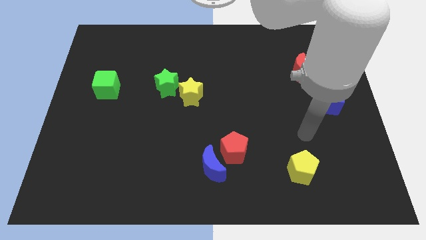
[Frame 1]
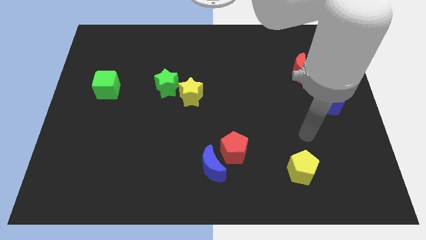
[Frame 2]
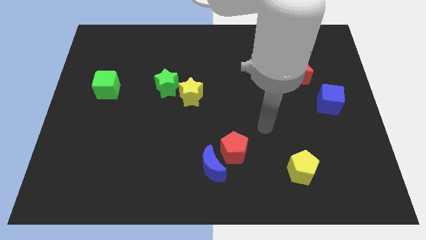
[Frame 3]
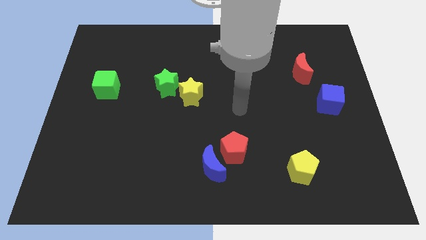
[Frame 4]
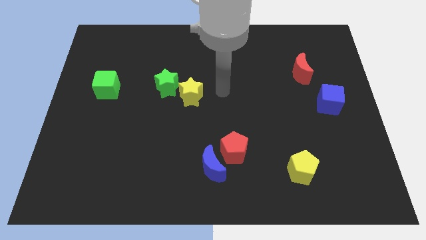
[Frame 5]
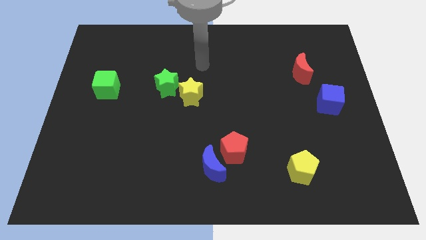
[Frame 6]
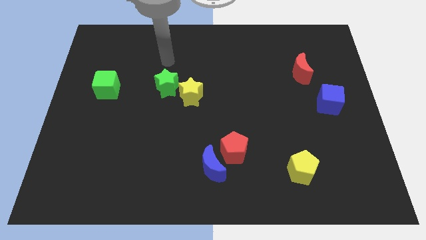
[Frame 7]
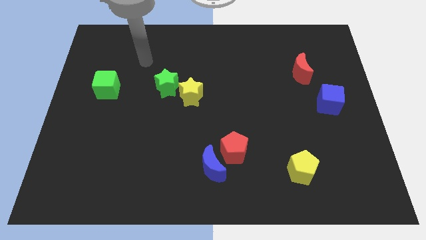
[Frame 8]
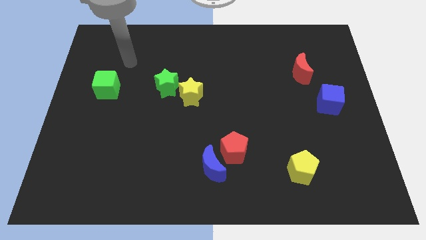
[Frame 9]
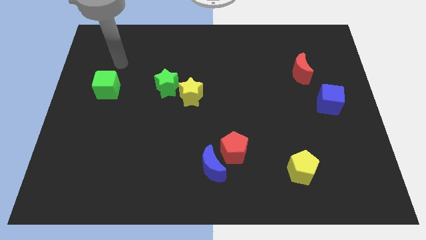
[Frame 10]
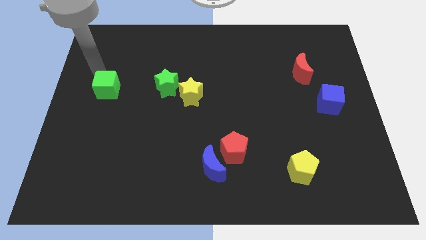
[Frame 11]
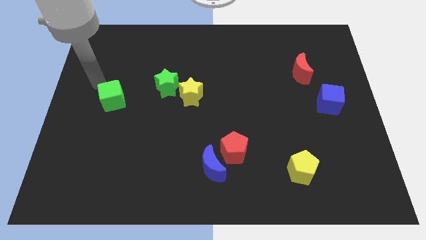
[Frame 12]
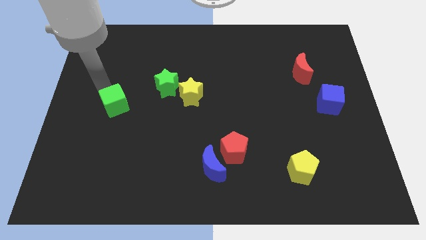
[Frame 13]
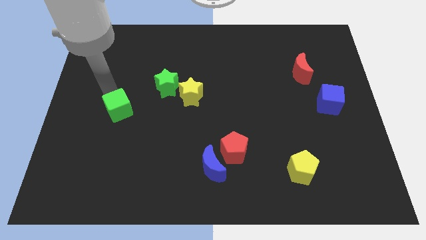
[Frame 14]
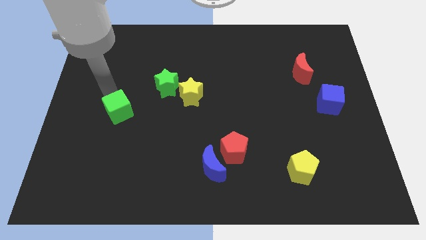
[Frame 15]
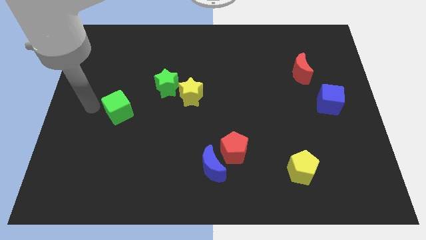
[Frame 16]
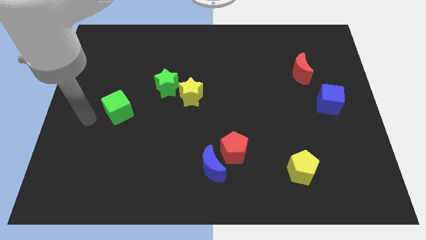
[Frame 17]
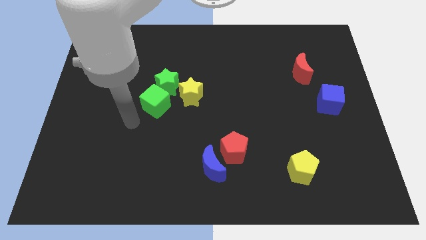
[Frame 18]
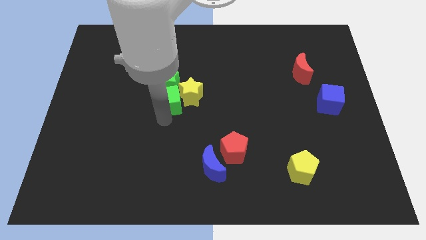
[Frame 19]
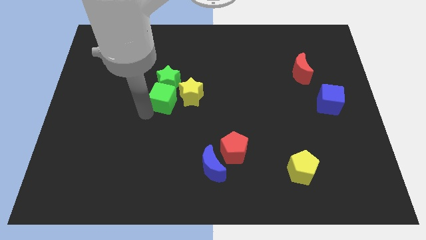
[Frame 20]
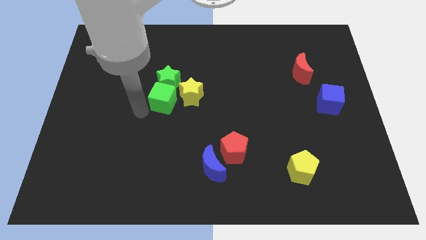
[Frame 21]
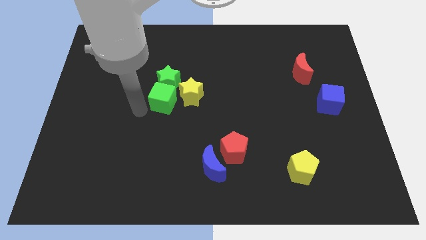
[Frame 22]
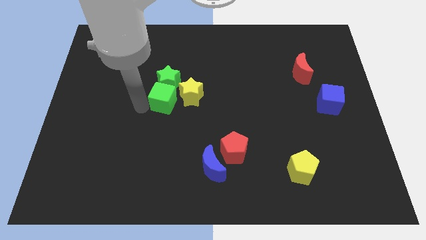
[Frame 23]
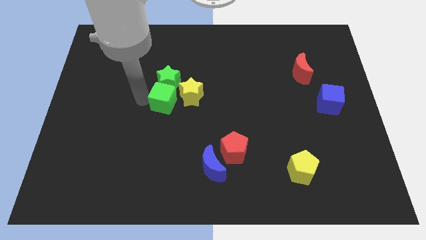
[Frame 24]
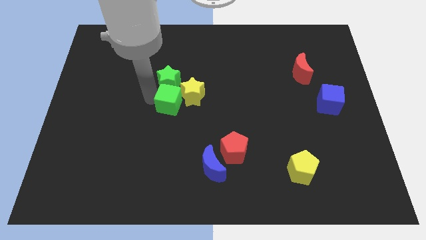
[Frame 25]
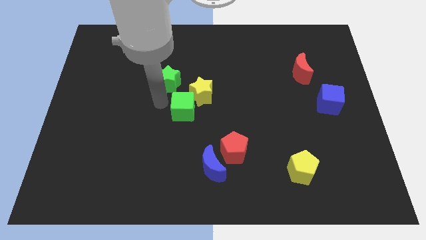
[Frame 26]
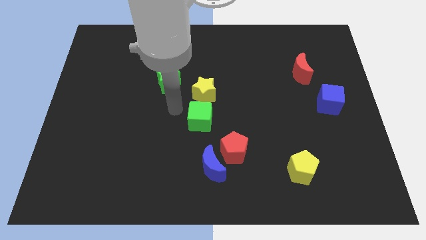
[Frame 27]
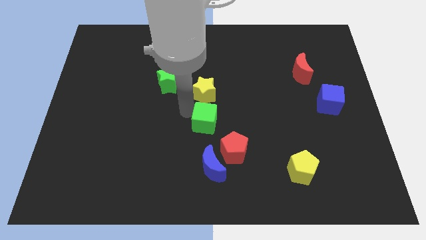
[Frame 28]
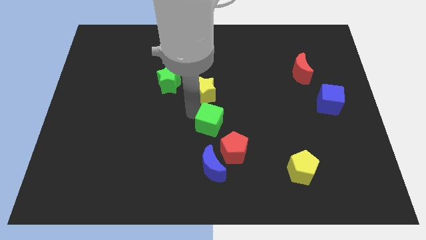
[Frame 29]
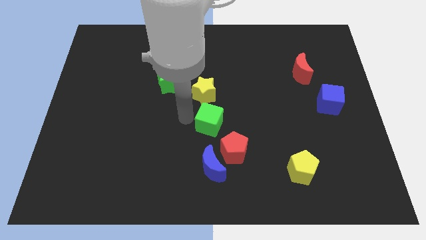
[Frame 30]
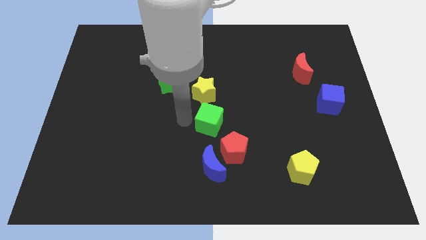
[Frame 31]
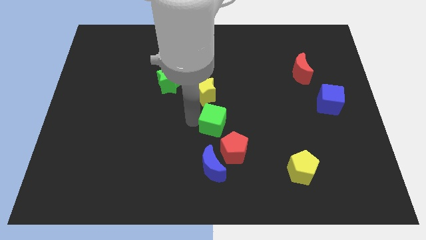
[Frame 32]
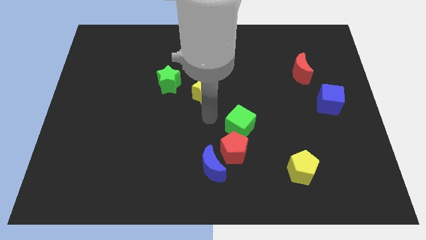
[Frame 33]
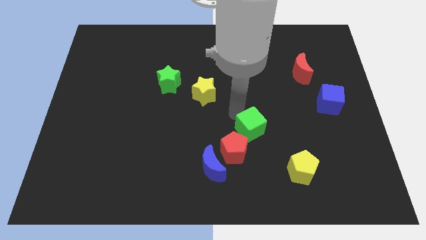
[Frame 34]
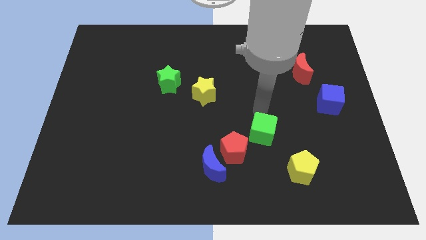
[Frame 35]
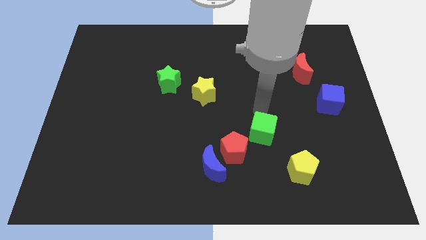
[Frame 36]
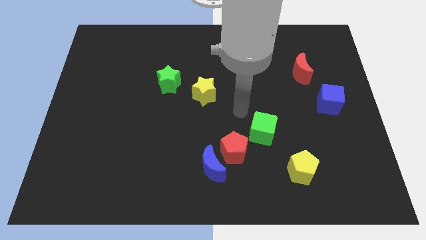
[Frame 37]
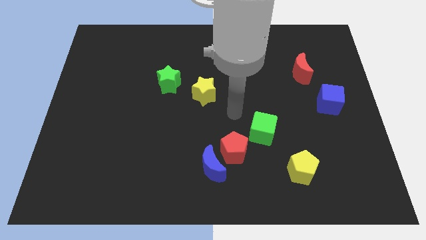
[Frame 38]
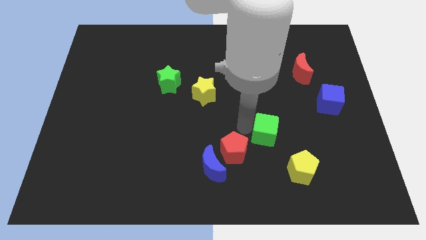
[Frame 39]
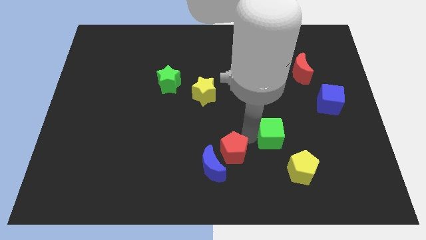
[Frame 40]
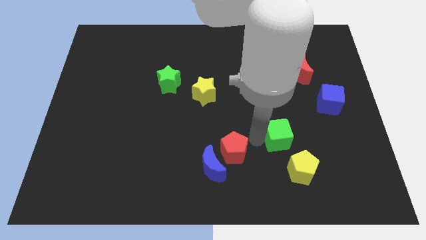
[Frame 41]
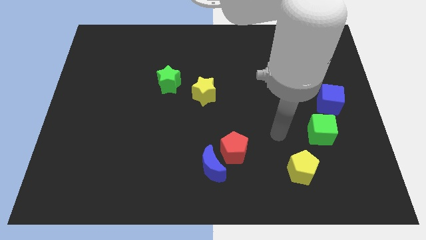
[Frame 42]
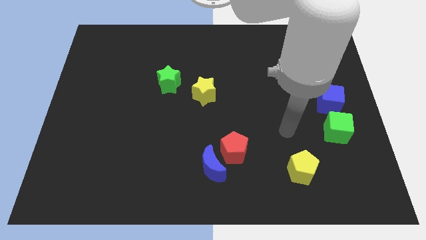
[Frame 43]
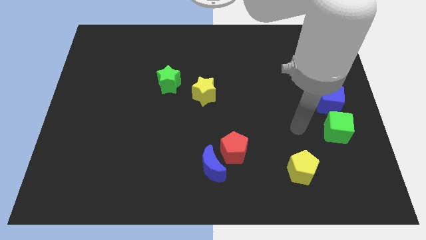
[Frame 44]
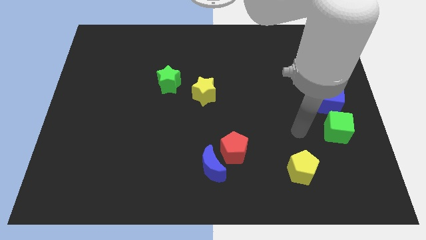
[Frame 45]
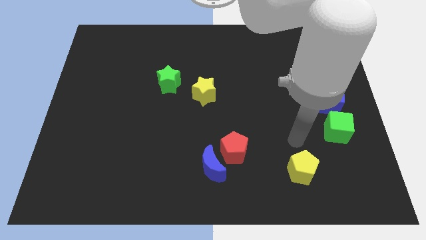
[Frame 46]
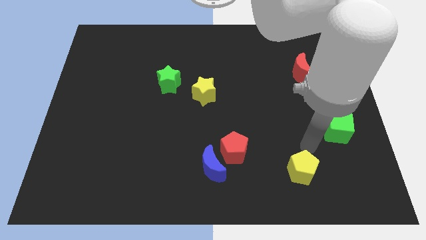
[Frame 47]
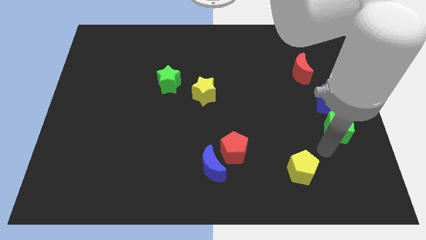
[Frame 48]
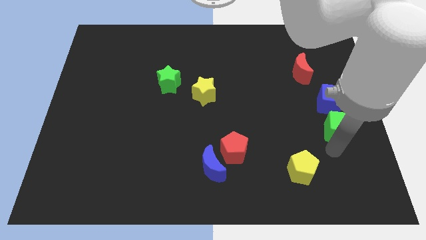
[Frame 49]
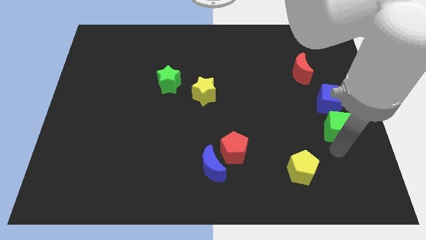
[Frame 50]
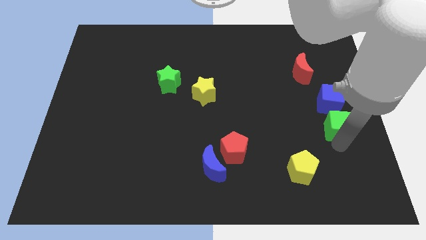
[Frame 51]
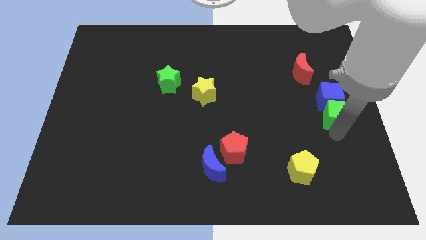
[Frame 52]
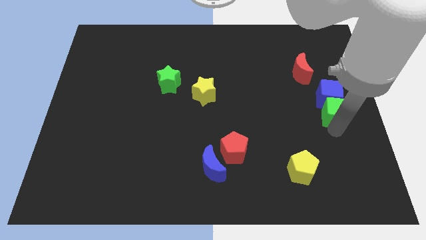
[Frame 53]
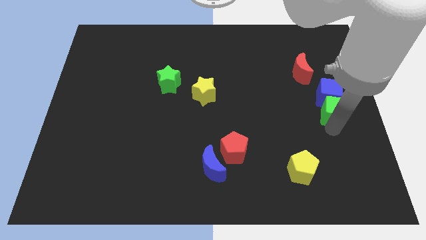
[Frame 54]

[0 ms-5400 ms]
put the green cube next to the blue cube

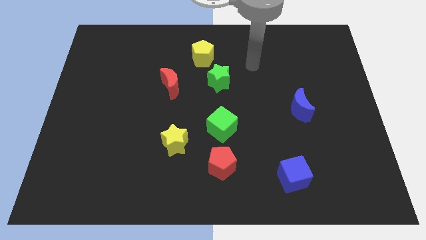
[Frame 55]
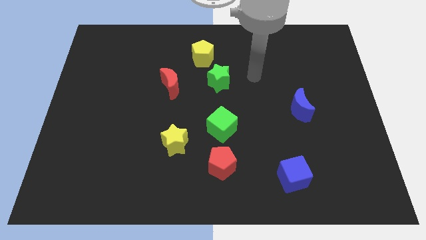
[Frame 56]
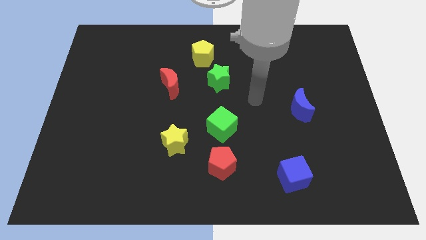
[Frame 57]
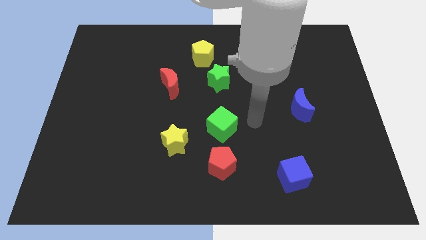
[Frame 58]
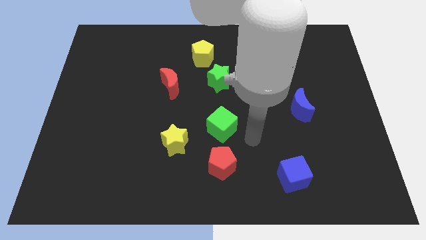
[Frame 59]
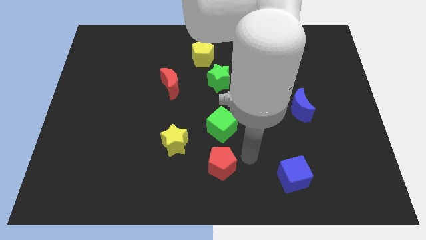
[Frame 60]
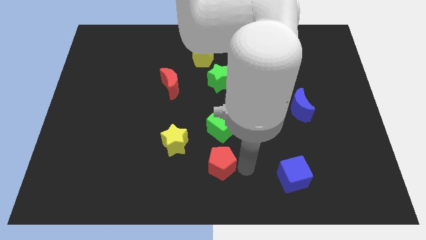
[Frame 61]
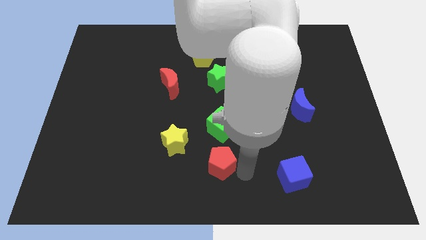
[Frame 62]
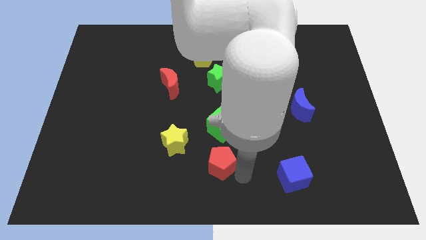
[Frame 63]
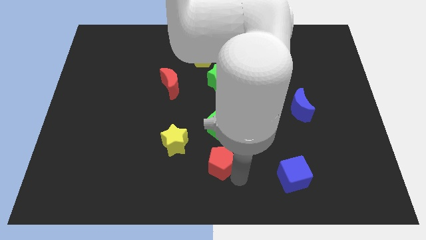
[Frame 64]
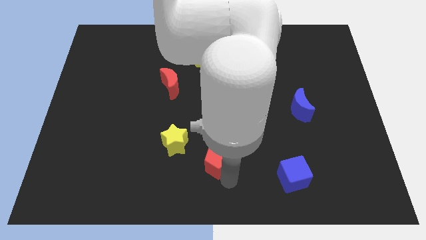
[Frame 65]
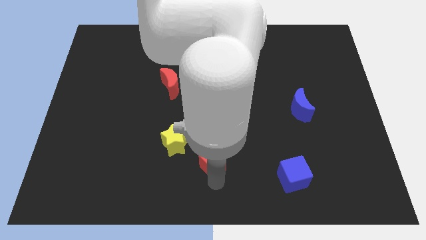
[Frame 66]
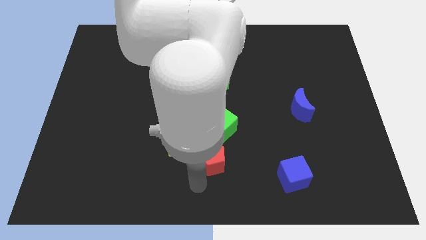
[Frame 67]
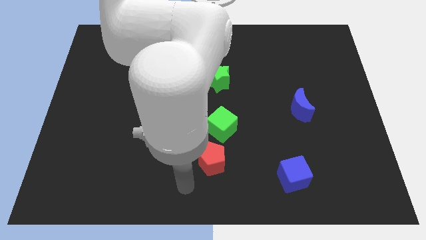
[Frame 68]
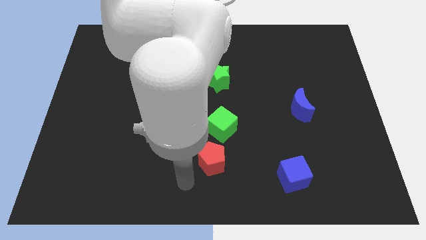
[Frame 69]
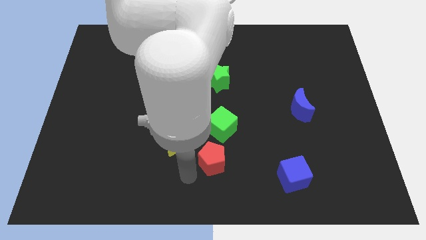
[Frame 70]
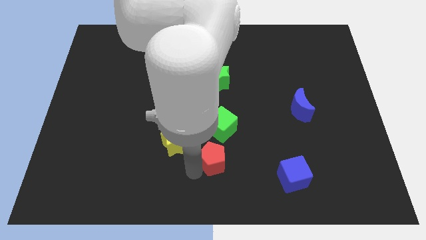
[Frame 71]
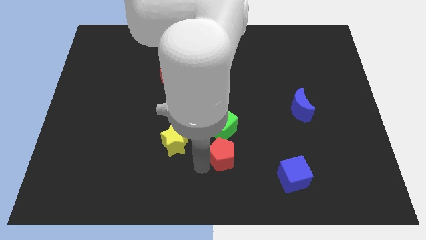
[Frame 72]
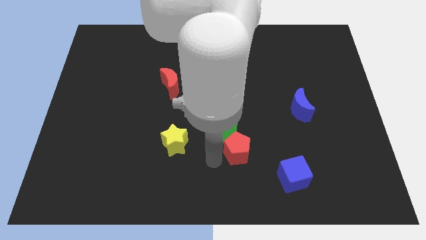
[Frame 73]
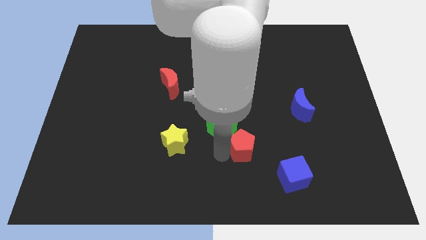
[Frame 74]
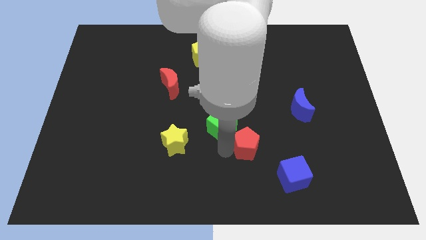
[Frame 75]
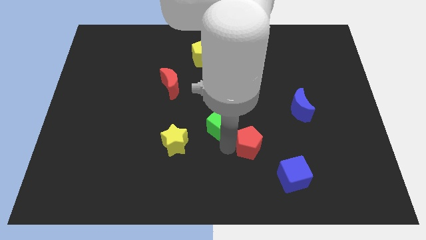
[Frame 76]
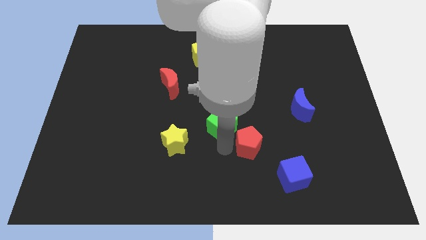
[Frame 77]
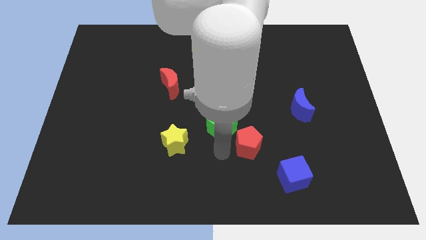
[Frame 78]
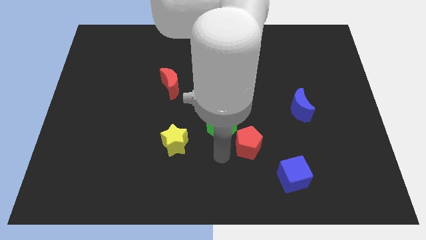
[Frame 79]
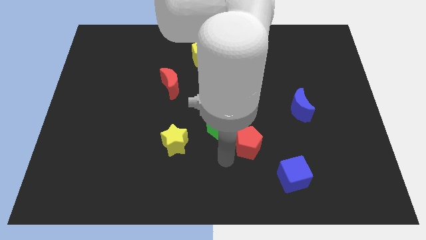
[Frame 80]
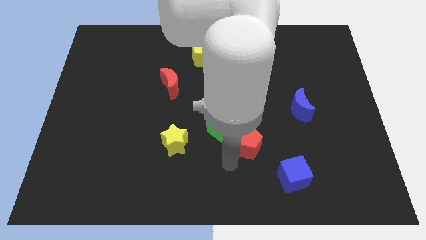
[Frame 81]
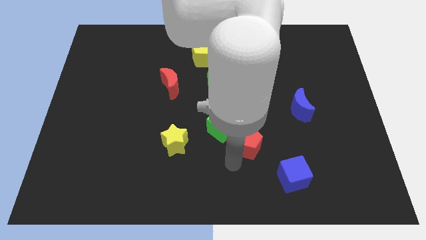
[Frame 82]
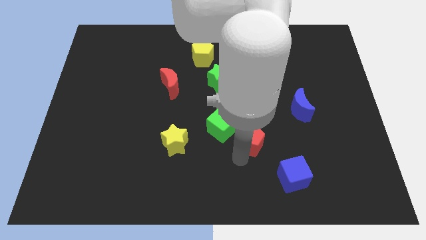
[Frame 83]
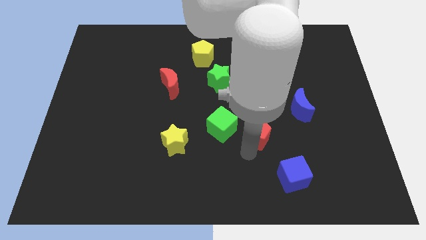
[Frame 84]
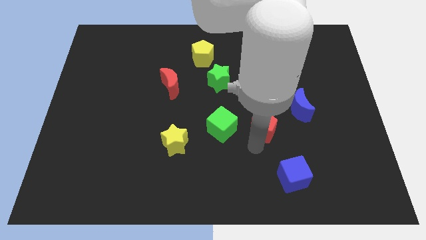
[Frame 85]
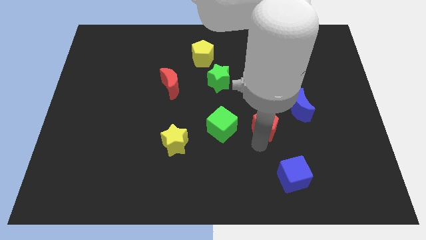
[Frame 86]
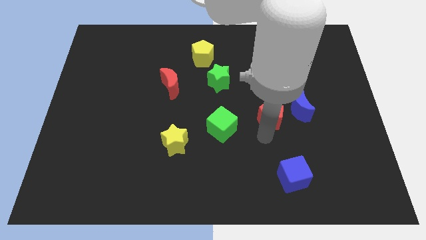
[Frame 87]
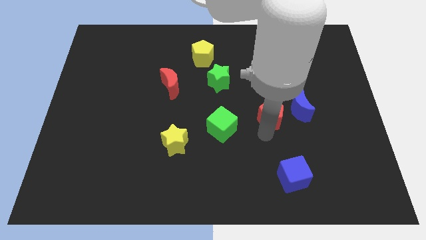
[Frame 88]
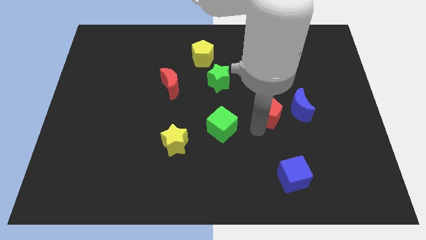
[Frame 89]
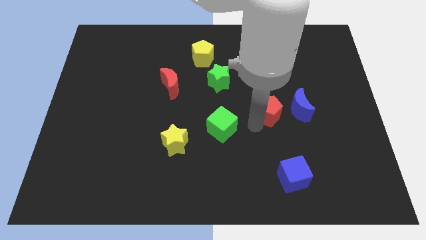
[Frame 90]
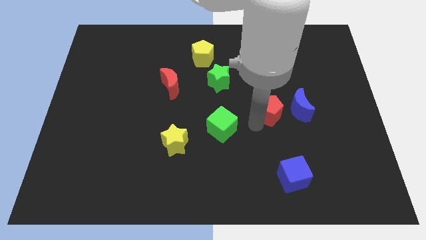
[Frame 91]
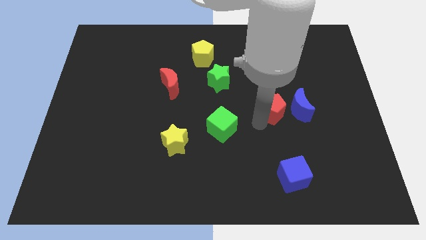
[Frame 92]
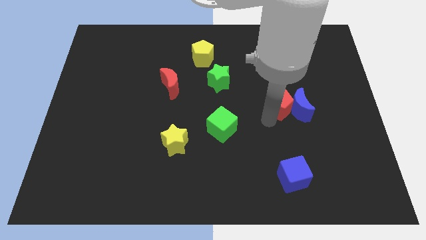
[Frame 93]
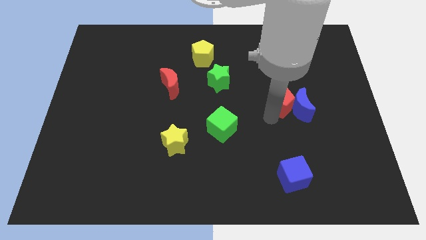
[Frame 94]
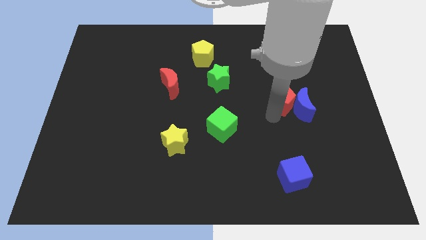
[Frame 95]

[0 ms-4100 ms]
slide the red pentagon towards the blue moon
